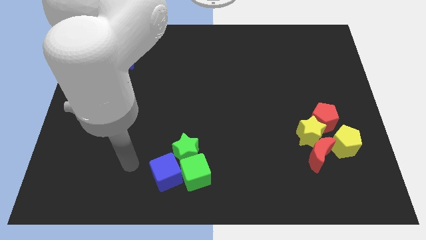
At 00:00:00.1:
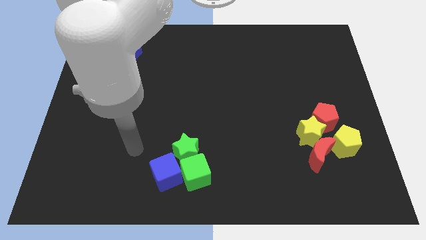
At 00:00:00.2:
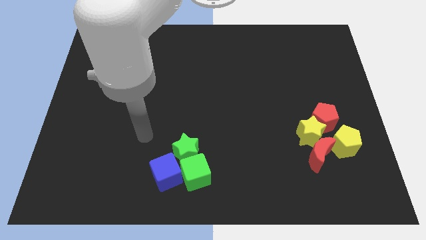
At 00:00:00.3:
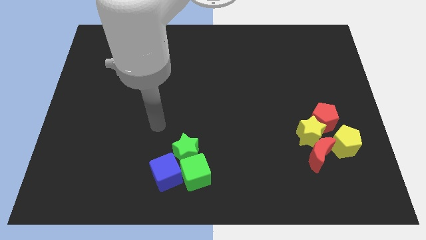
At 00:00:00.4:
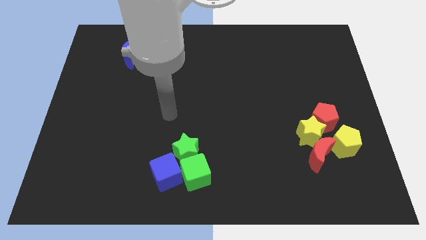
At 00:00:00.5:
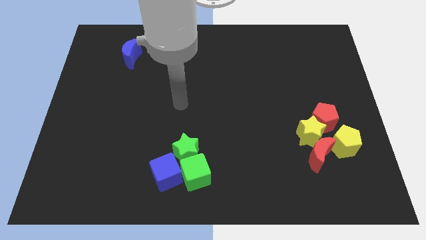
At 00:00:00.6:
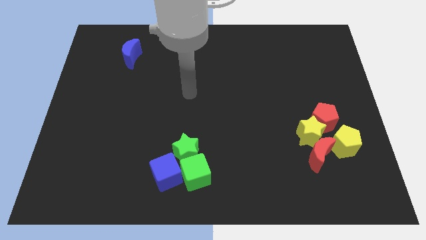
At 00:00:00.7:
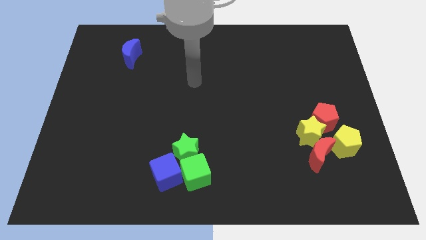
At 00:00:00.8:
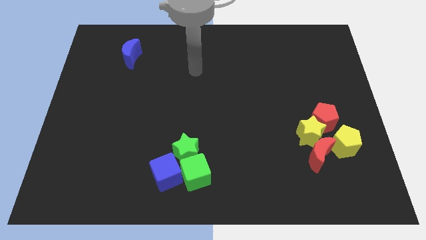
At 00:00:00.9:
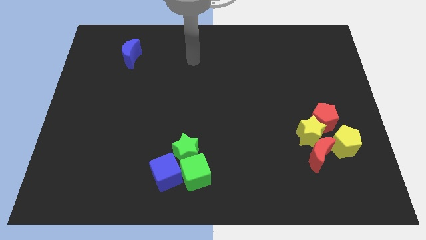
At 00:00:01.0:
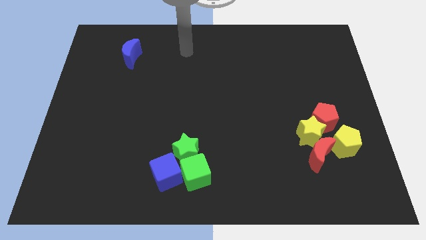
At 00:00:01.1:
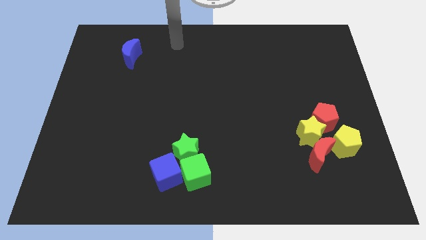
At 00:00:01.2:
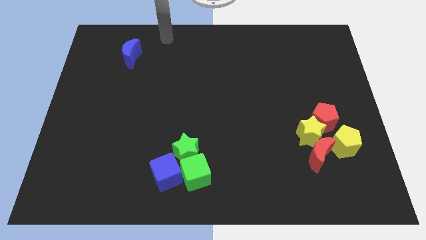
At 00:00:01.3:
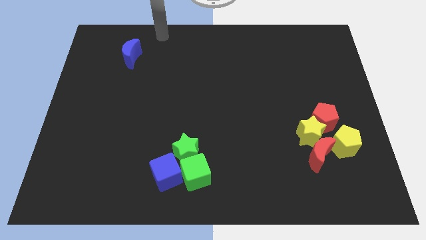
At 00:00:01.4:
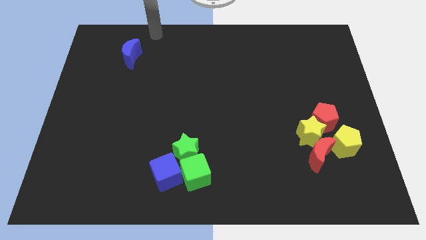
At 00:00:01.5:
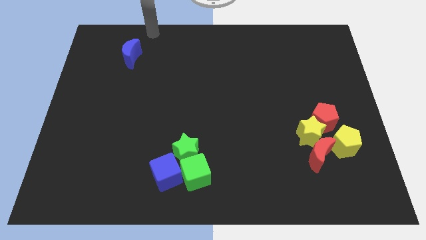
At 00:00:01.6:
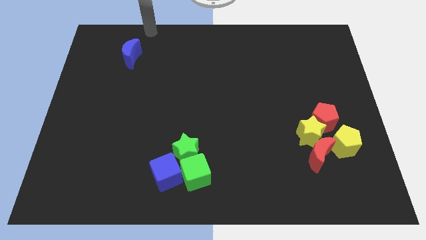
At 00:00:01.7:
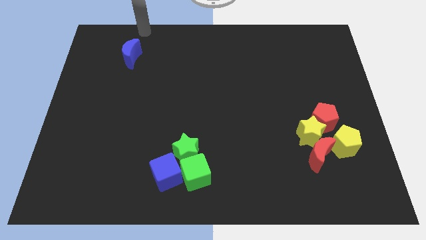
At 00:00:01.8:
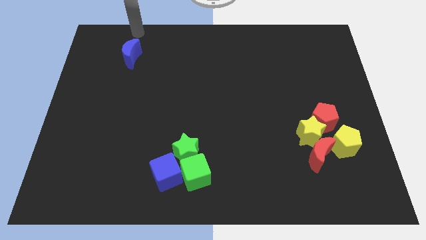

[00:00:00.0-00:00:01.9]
push your arm vertically above the blue moon

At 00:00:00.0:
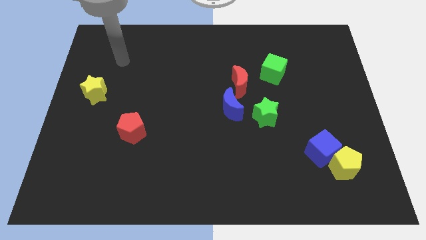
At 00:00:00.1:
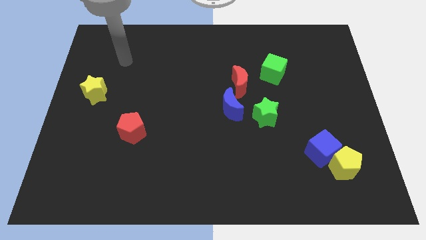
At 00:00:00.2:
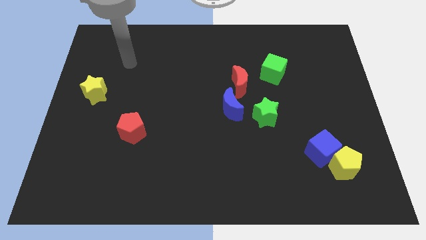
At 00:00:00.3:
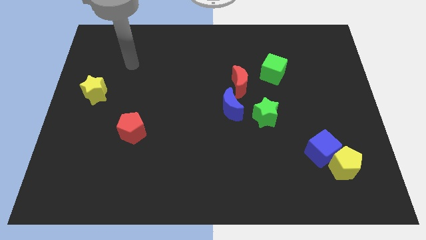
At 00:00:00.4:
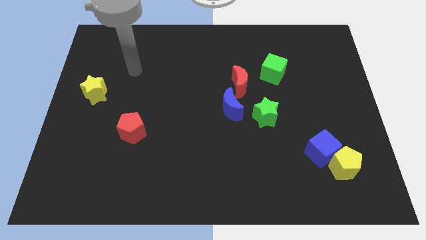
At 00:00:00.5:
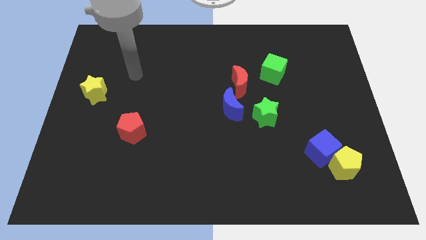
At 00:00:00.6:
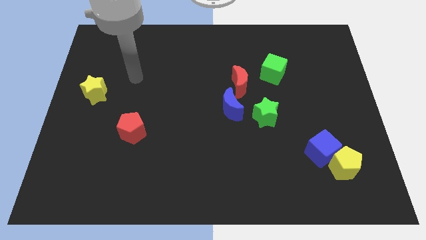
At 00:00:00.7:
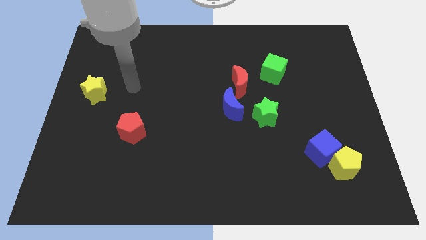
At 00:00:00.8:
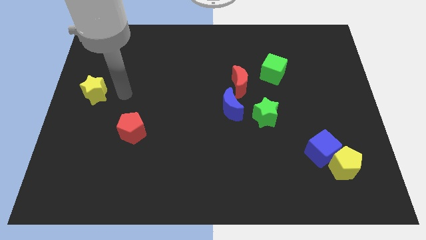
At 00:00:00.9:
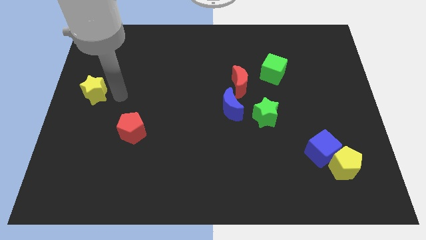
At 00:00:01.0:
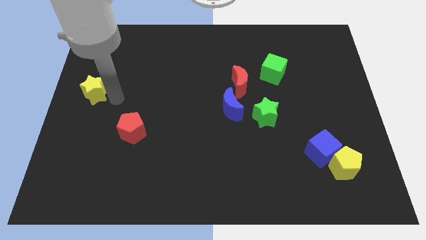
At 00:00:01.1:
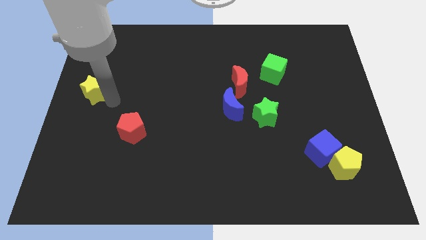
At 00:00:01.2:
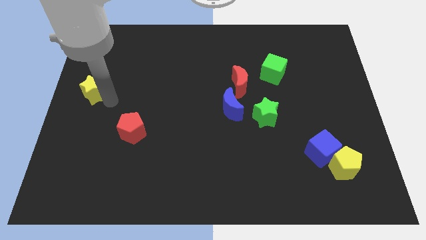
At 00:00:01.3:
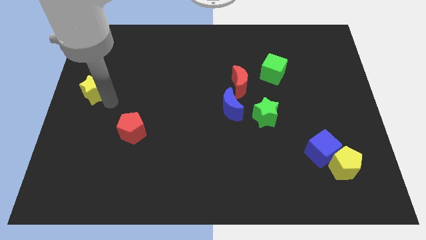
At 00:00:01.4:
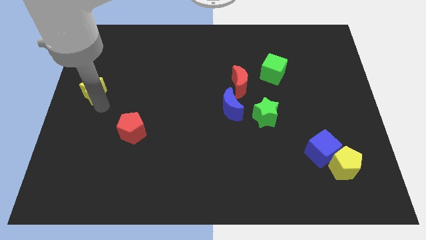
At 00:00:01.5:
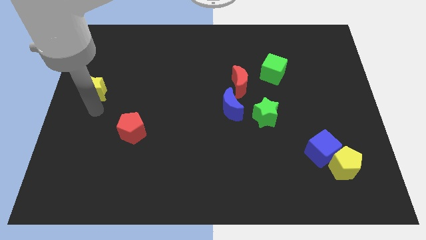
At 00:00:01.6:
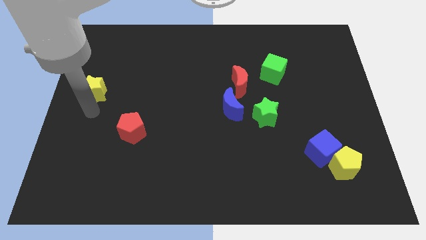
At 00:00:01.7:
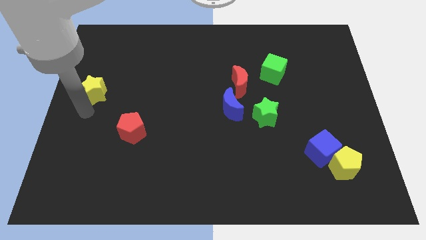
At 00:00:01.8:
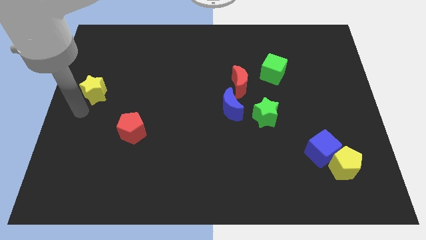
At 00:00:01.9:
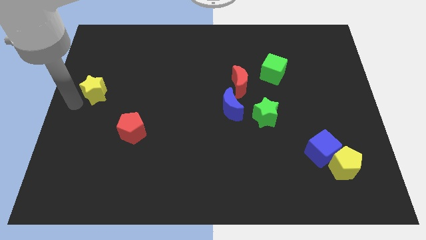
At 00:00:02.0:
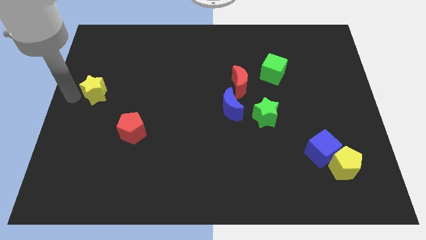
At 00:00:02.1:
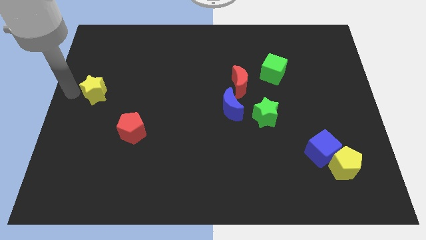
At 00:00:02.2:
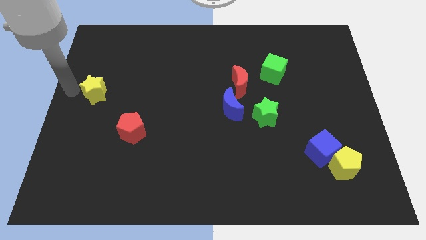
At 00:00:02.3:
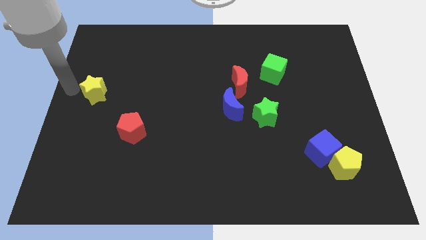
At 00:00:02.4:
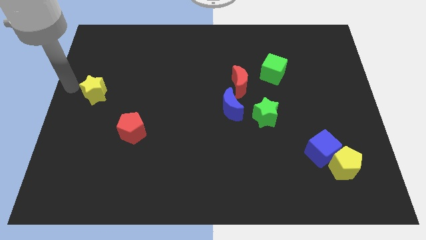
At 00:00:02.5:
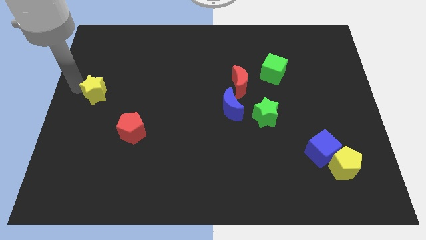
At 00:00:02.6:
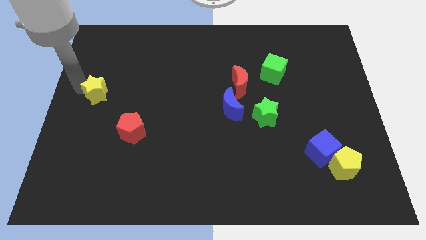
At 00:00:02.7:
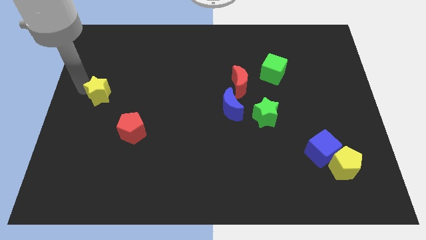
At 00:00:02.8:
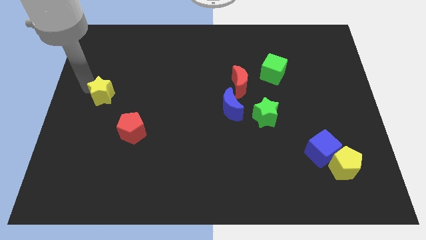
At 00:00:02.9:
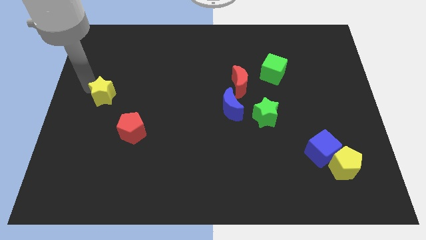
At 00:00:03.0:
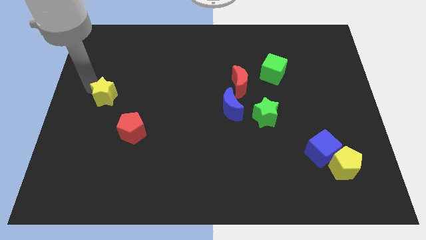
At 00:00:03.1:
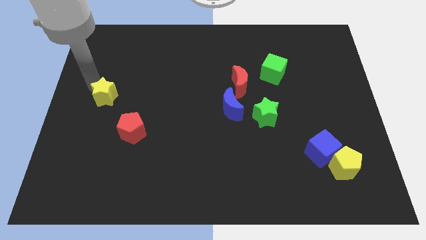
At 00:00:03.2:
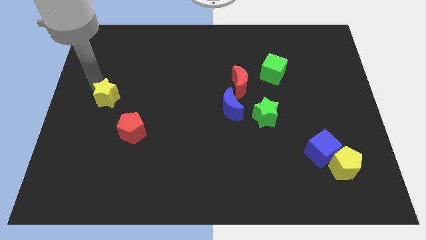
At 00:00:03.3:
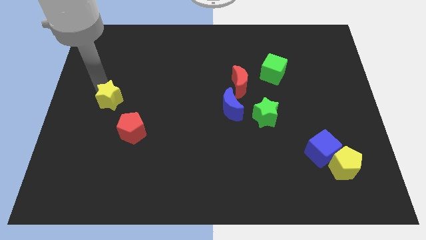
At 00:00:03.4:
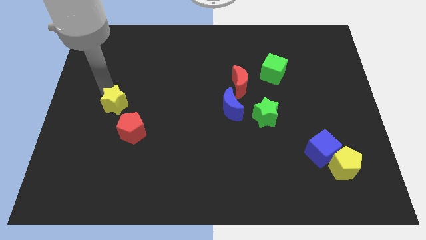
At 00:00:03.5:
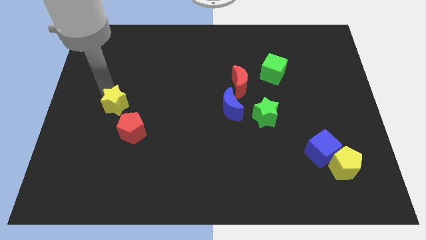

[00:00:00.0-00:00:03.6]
place the yellow star above the red pentagon

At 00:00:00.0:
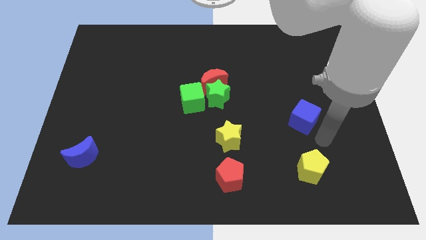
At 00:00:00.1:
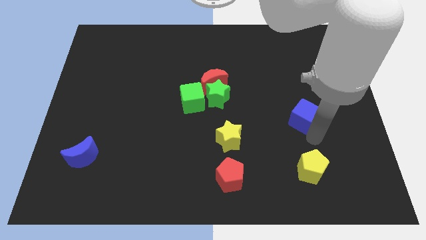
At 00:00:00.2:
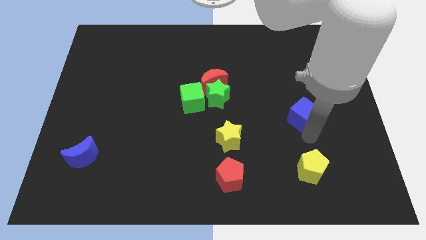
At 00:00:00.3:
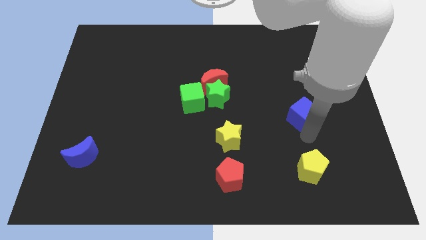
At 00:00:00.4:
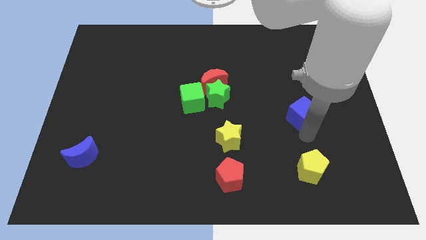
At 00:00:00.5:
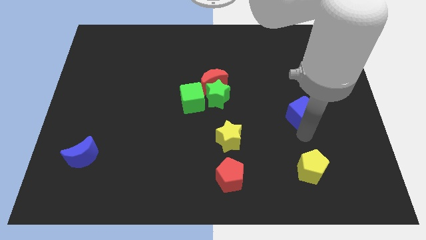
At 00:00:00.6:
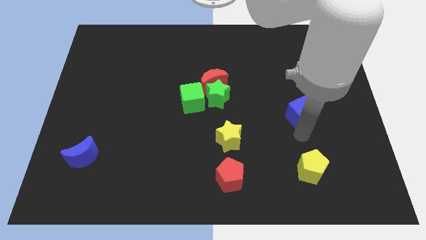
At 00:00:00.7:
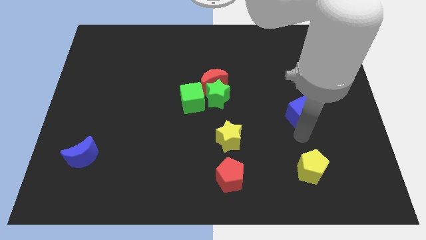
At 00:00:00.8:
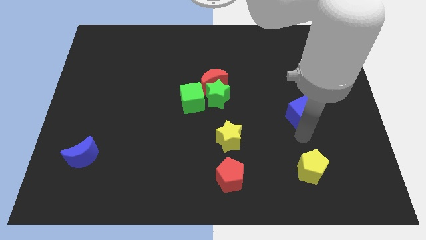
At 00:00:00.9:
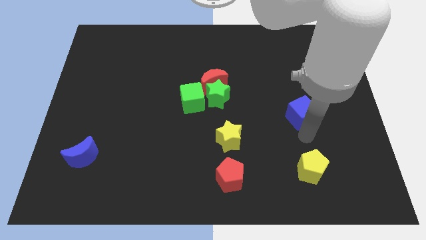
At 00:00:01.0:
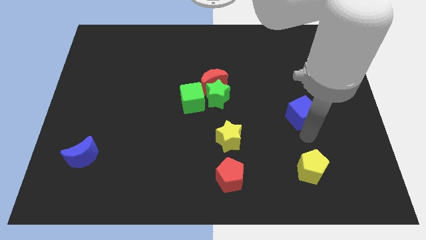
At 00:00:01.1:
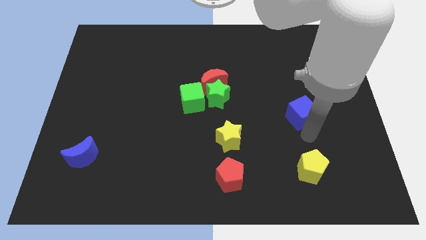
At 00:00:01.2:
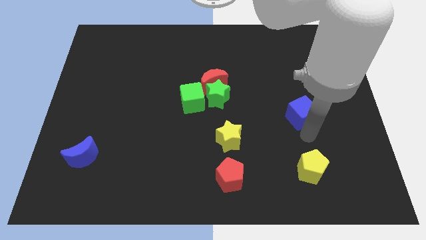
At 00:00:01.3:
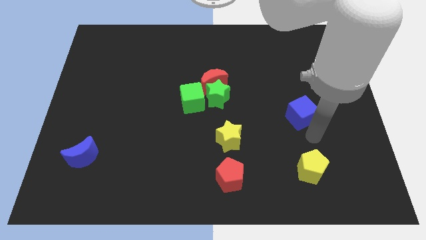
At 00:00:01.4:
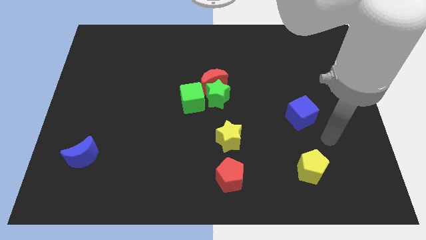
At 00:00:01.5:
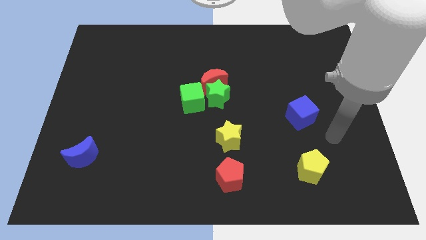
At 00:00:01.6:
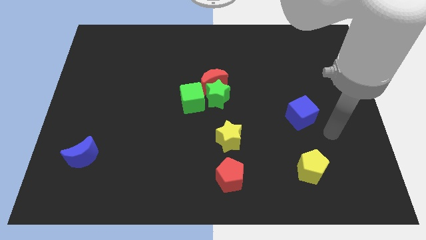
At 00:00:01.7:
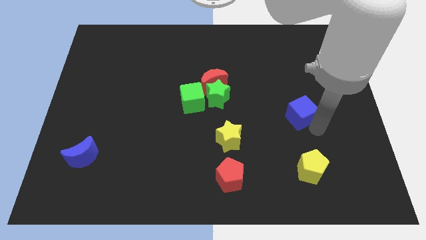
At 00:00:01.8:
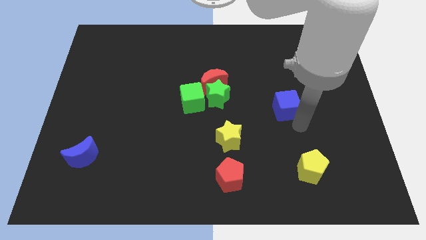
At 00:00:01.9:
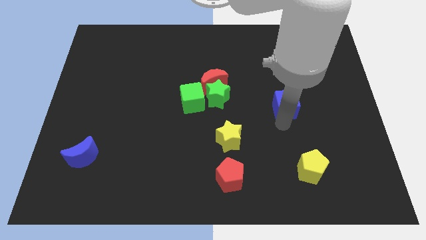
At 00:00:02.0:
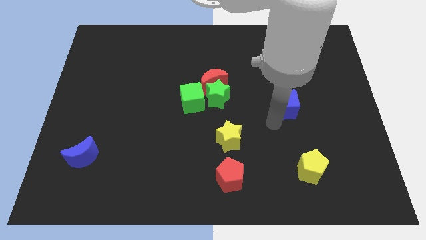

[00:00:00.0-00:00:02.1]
push blue cube towards the middle of the board

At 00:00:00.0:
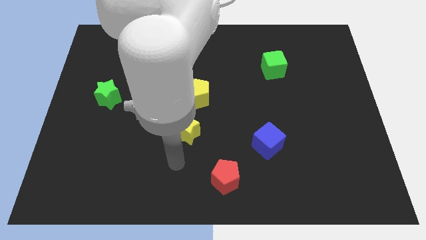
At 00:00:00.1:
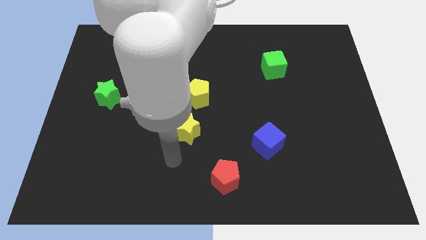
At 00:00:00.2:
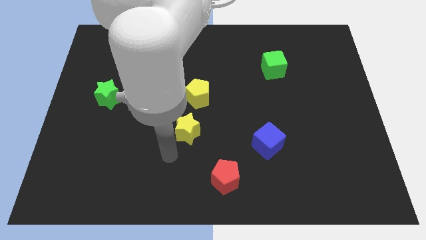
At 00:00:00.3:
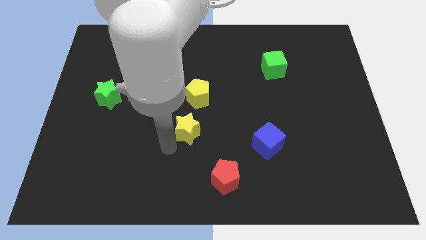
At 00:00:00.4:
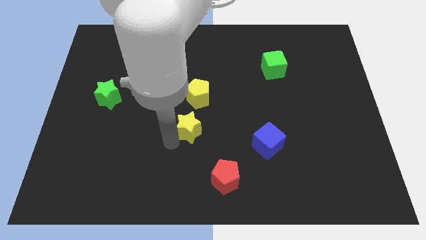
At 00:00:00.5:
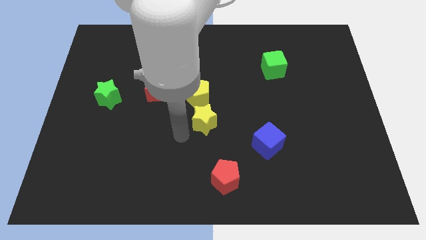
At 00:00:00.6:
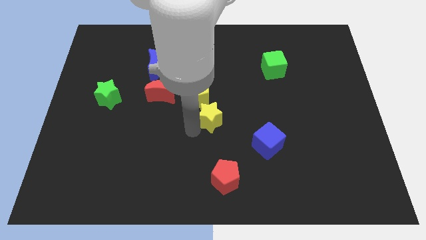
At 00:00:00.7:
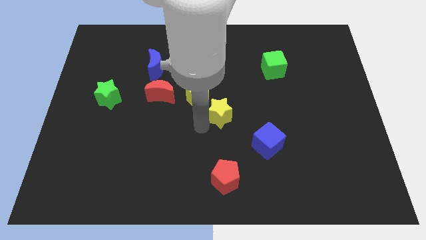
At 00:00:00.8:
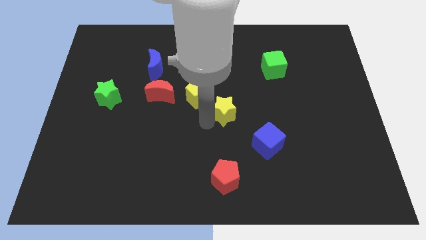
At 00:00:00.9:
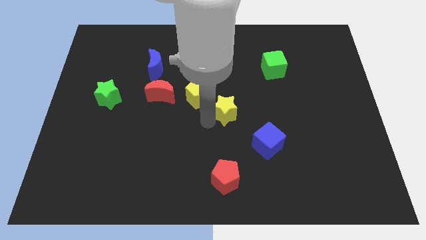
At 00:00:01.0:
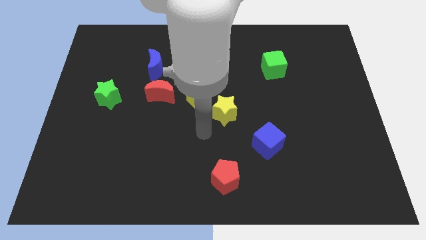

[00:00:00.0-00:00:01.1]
move yellow star in between yellow pentagon and blue cube
